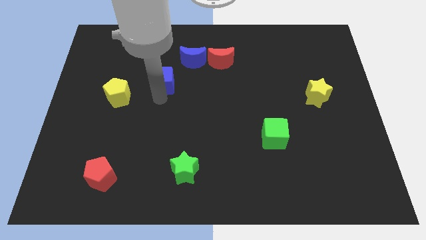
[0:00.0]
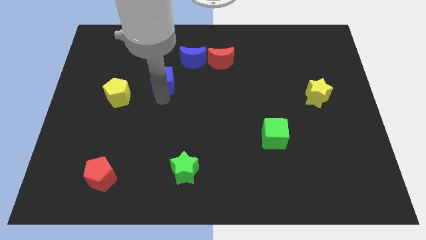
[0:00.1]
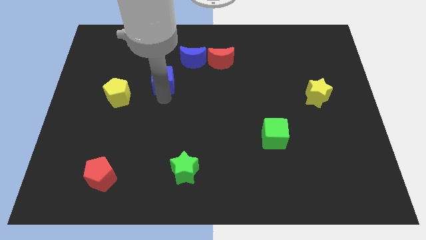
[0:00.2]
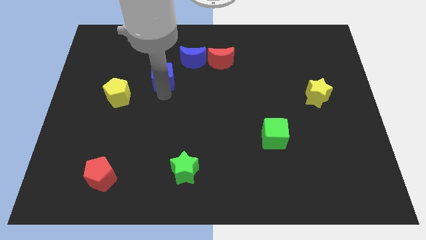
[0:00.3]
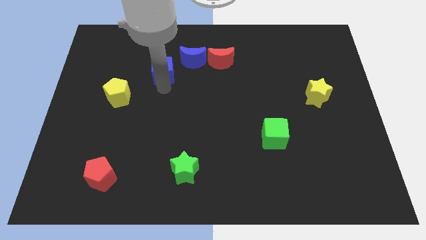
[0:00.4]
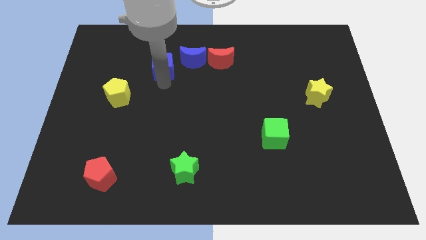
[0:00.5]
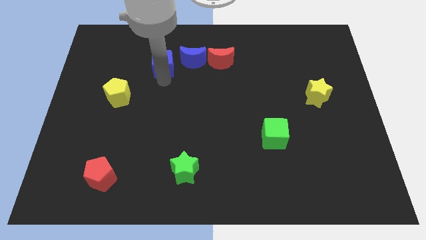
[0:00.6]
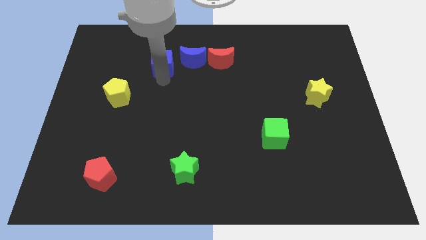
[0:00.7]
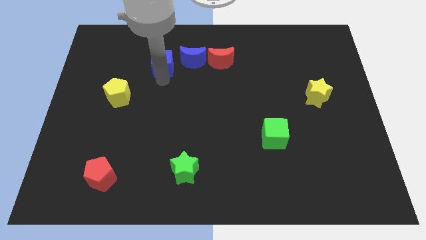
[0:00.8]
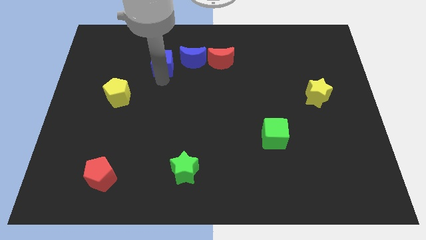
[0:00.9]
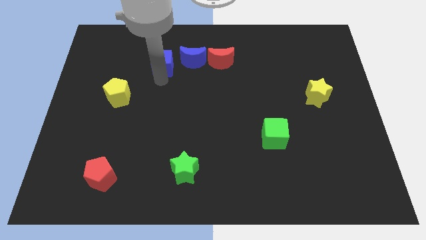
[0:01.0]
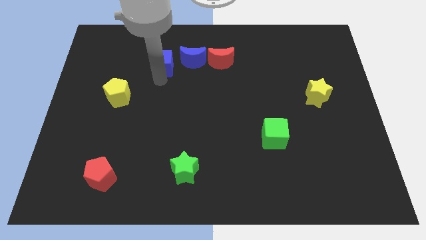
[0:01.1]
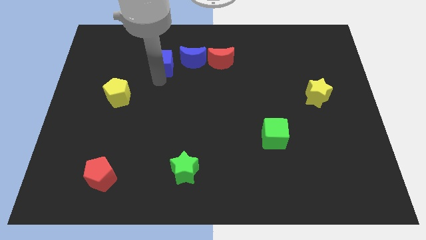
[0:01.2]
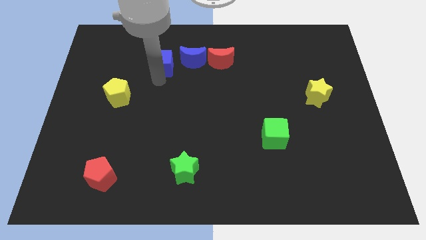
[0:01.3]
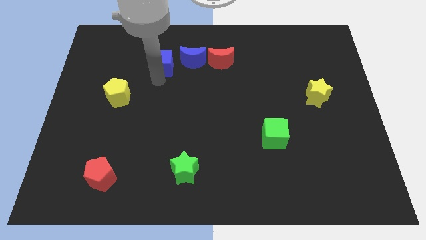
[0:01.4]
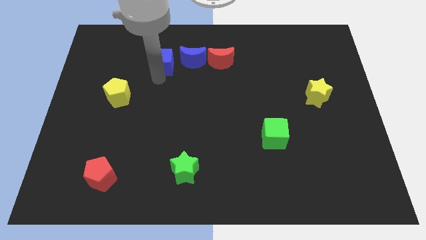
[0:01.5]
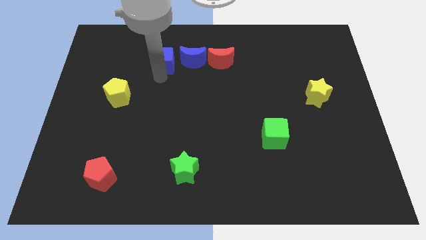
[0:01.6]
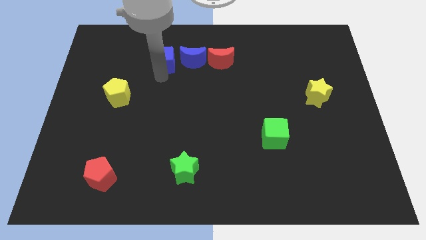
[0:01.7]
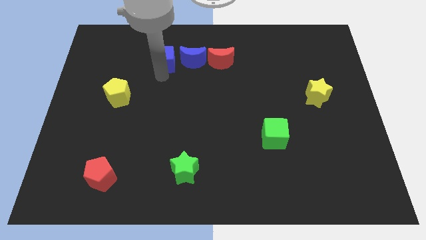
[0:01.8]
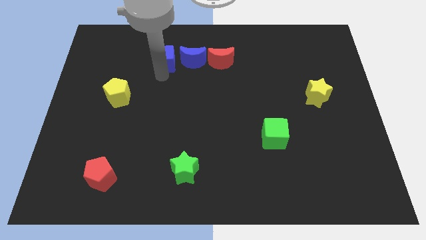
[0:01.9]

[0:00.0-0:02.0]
move the blue cube to the left of the blue moon

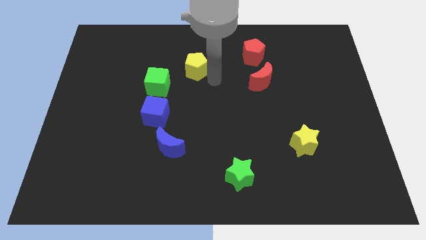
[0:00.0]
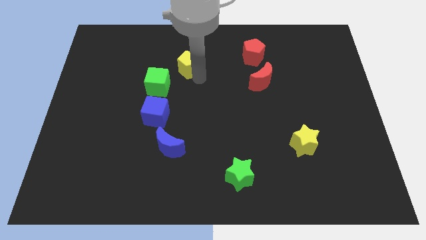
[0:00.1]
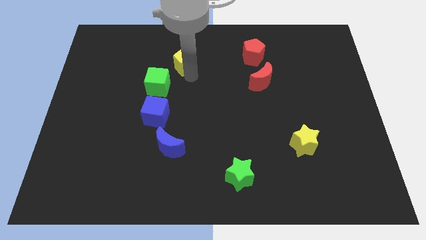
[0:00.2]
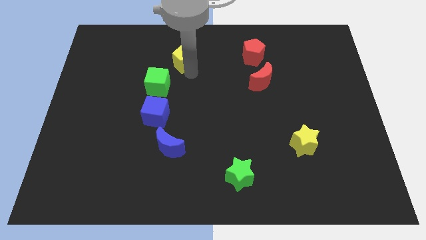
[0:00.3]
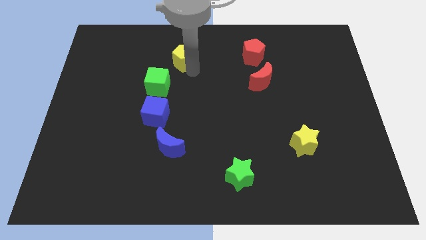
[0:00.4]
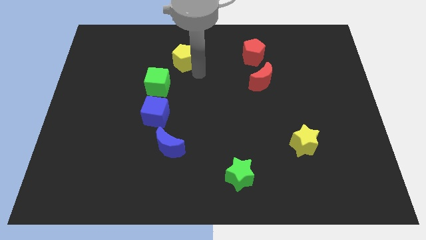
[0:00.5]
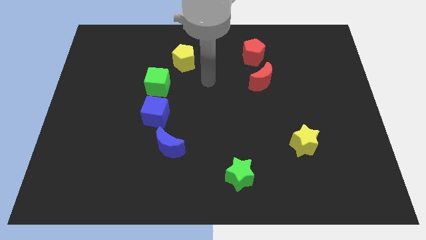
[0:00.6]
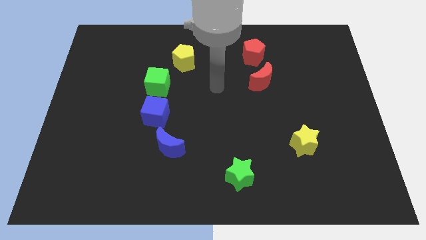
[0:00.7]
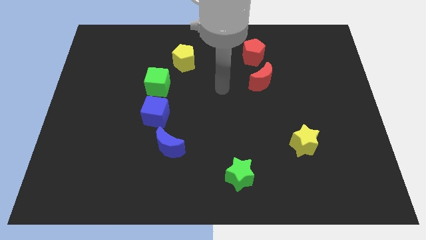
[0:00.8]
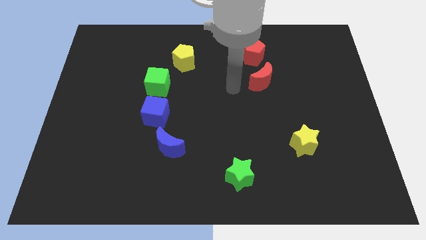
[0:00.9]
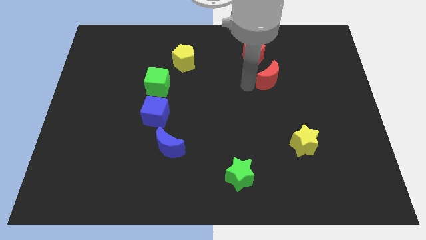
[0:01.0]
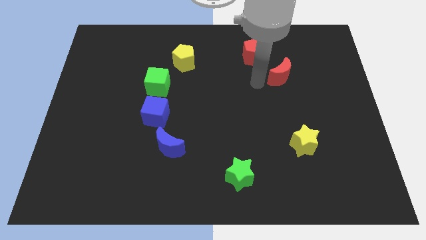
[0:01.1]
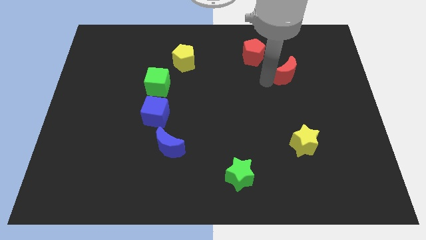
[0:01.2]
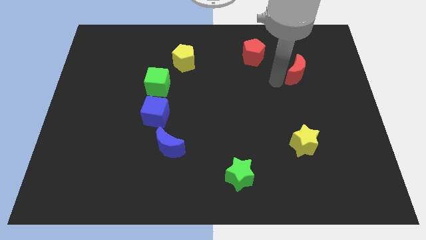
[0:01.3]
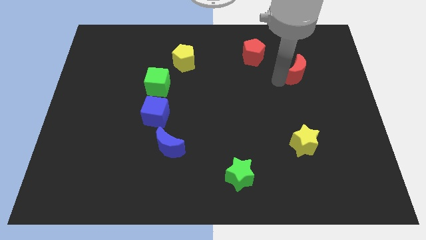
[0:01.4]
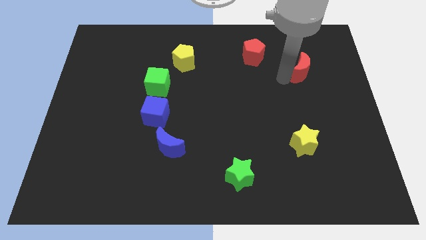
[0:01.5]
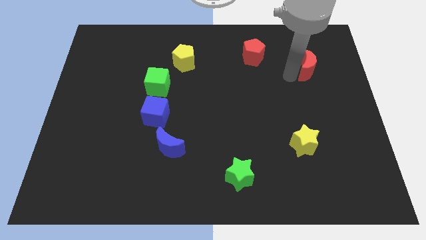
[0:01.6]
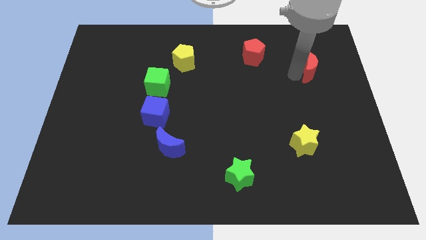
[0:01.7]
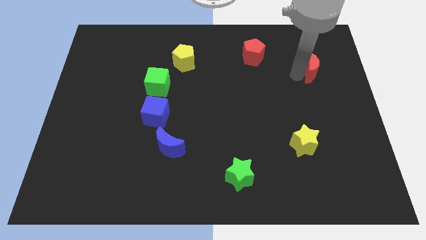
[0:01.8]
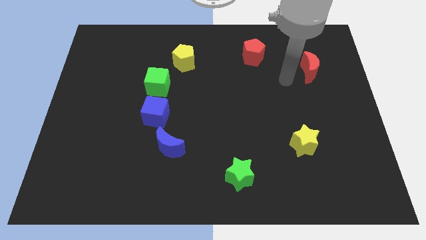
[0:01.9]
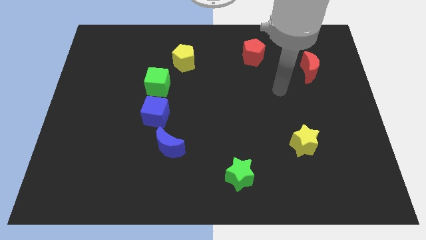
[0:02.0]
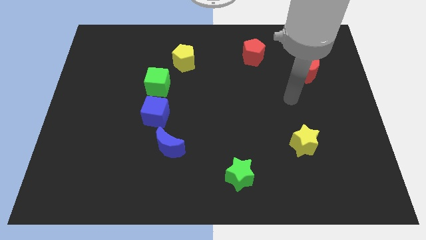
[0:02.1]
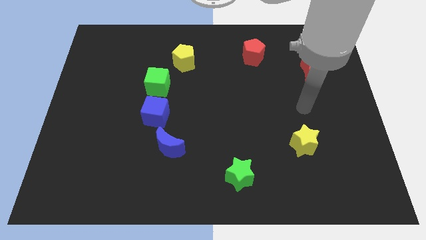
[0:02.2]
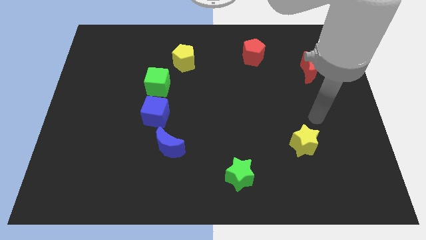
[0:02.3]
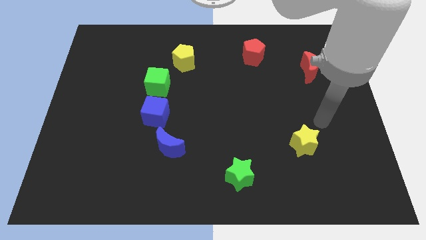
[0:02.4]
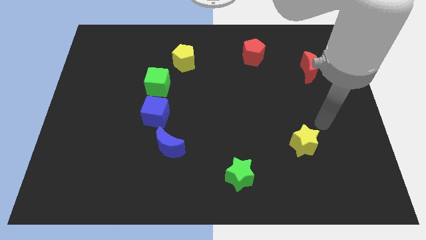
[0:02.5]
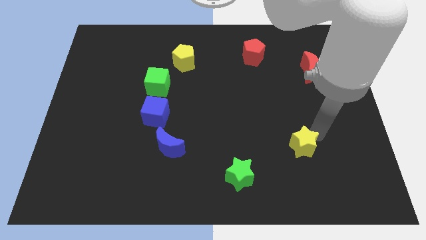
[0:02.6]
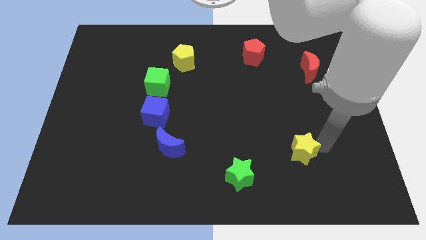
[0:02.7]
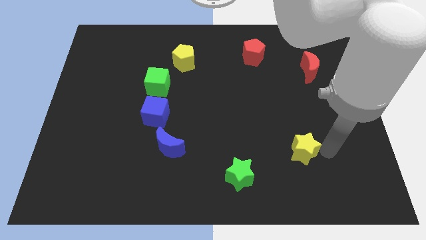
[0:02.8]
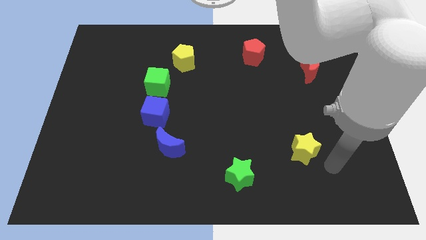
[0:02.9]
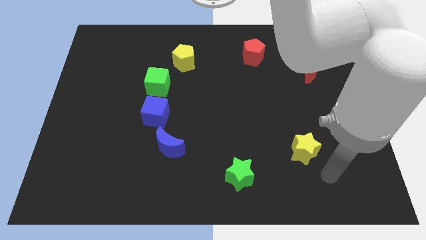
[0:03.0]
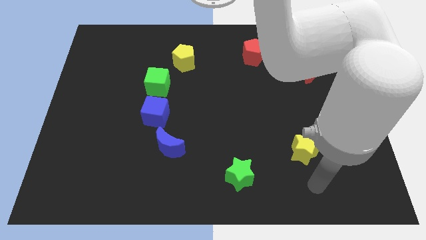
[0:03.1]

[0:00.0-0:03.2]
place your arm below yellow star

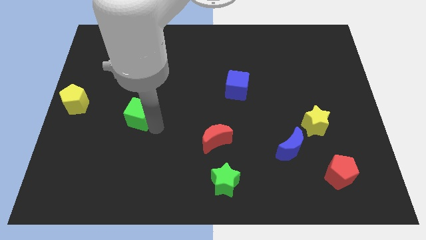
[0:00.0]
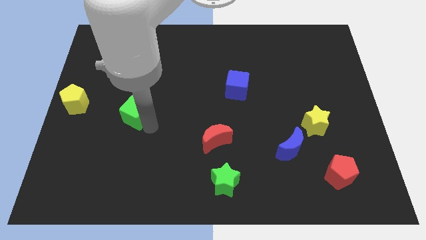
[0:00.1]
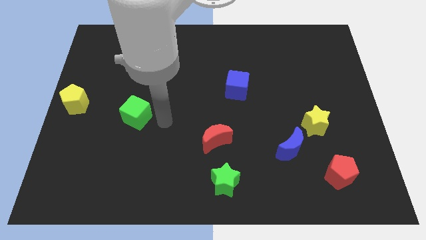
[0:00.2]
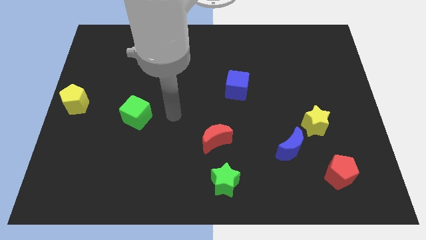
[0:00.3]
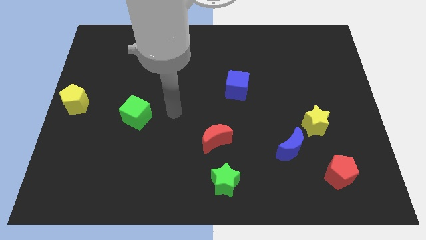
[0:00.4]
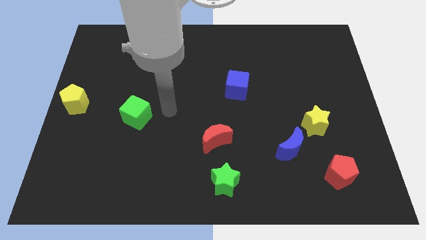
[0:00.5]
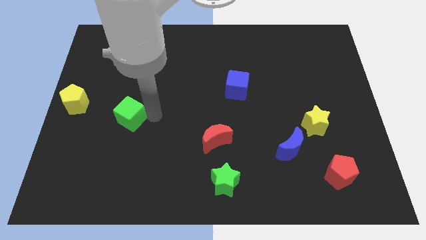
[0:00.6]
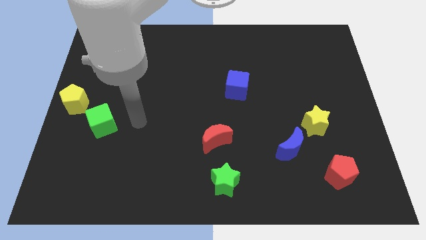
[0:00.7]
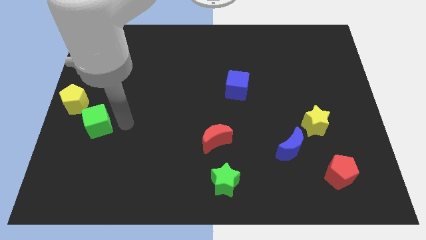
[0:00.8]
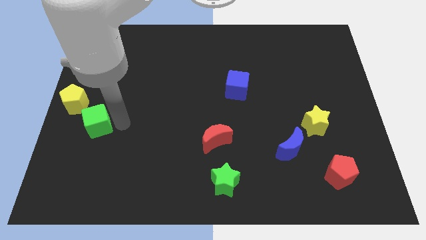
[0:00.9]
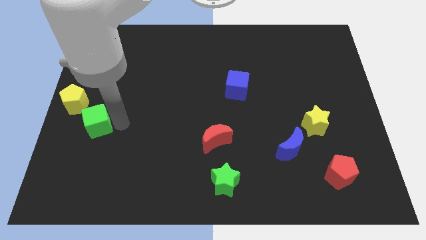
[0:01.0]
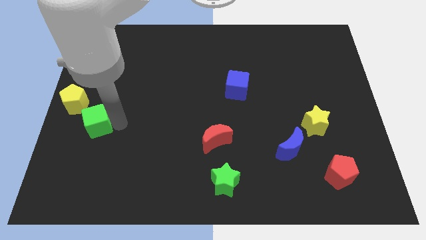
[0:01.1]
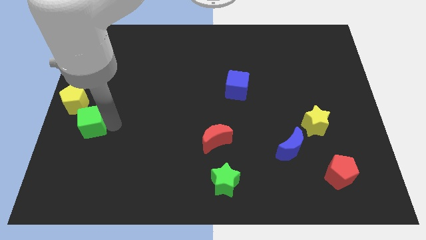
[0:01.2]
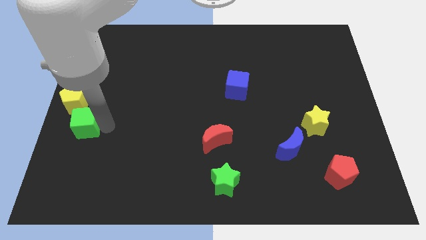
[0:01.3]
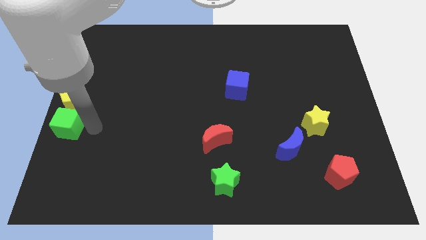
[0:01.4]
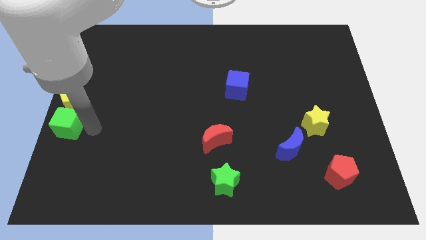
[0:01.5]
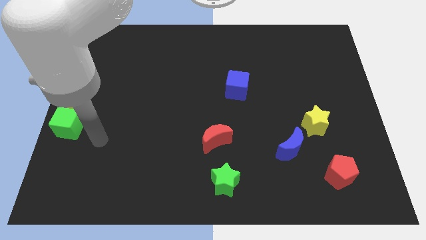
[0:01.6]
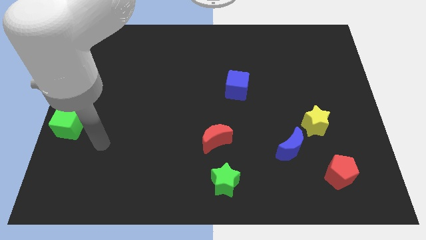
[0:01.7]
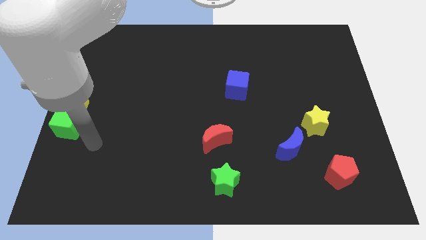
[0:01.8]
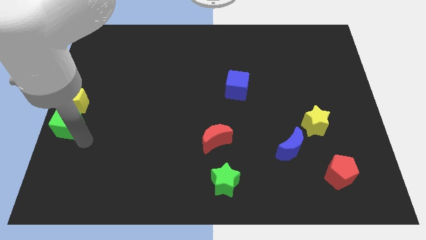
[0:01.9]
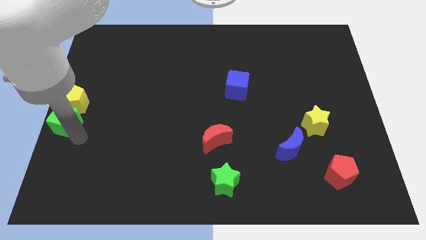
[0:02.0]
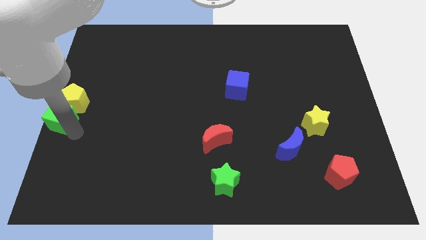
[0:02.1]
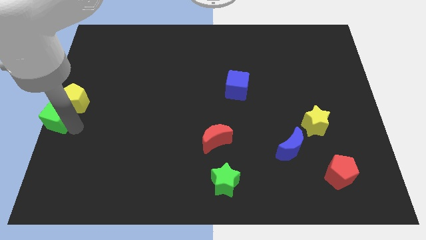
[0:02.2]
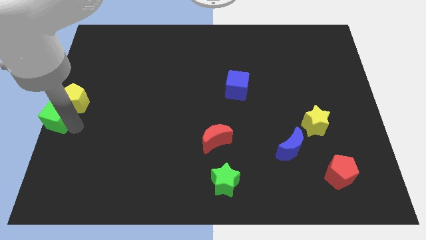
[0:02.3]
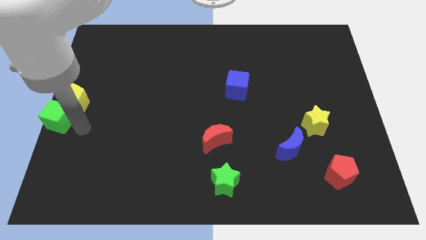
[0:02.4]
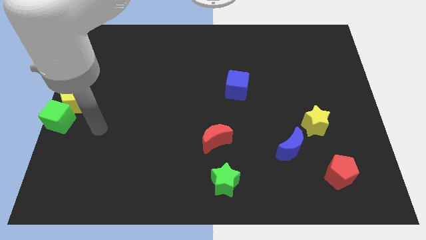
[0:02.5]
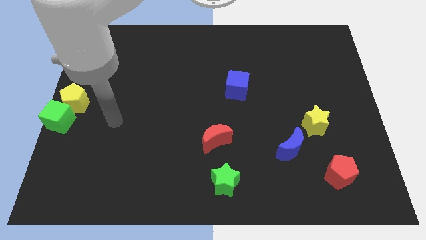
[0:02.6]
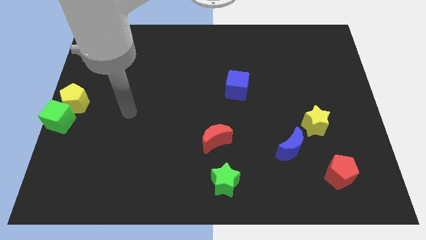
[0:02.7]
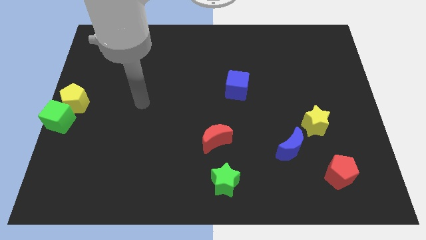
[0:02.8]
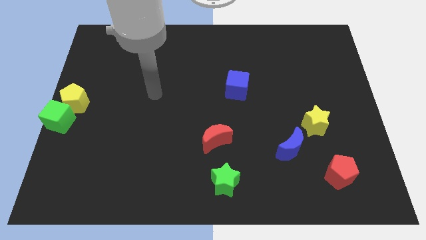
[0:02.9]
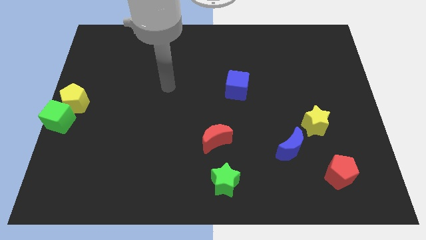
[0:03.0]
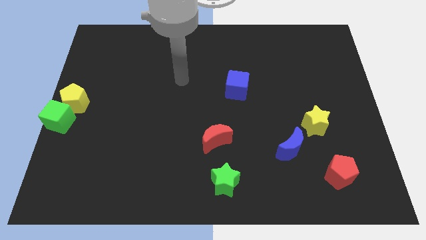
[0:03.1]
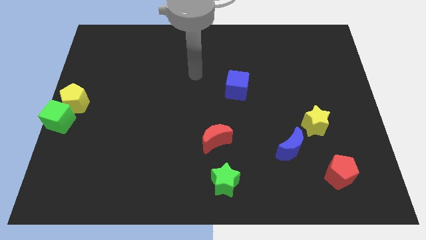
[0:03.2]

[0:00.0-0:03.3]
place green cube below yellow pentagon

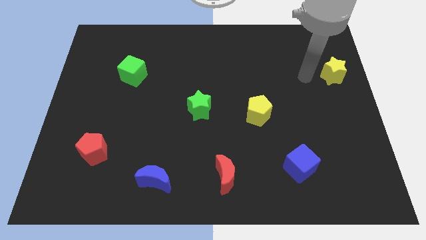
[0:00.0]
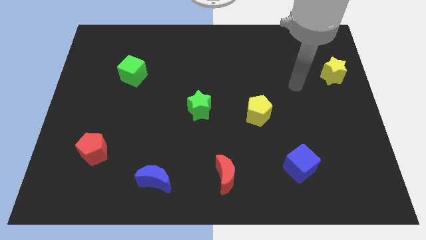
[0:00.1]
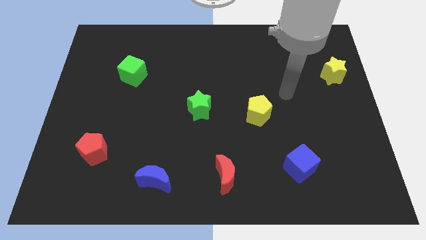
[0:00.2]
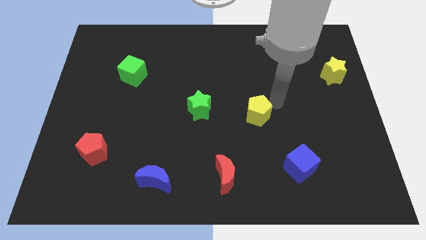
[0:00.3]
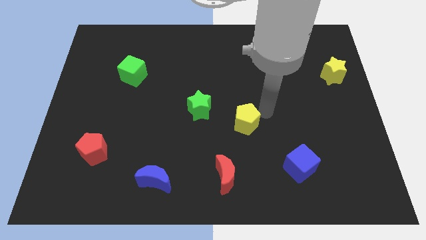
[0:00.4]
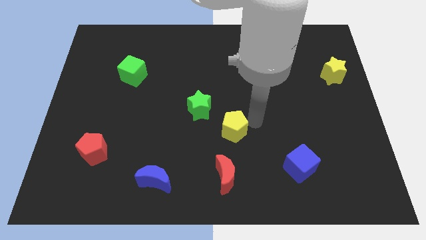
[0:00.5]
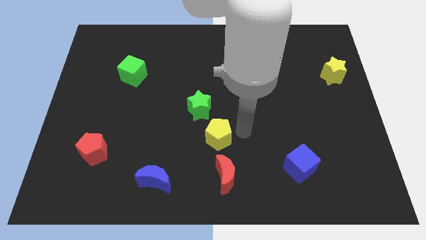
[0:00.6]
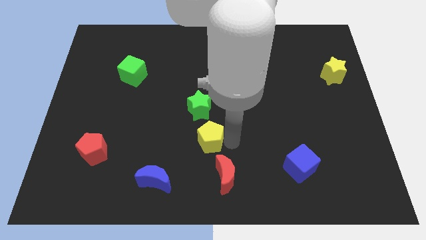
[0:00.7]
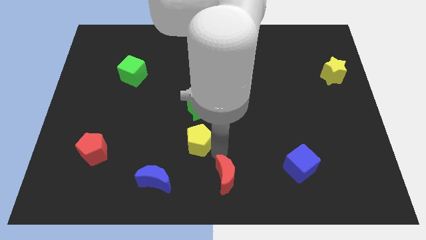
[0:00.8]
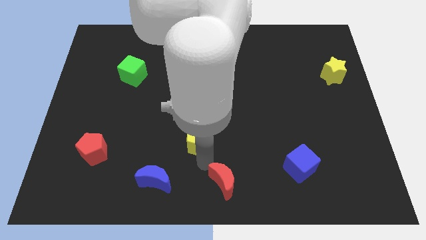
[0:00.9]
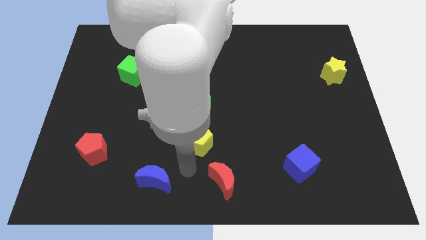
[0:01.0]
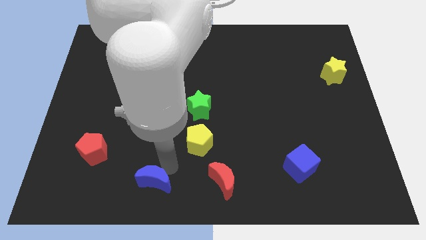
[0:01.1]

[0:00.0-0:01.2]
place the yellow pentagon at the top left of the red moon
